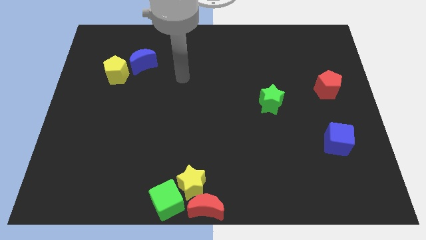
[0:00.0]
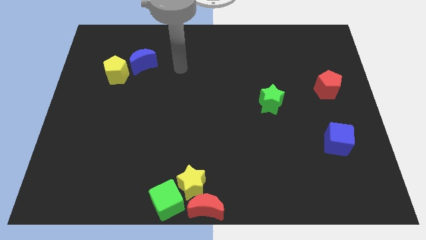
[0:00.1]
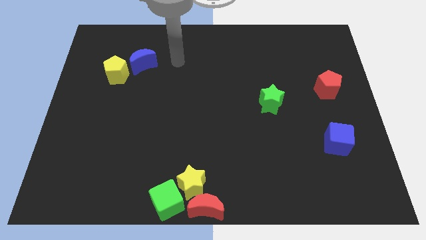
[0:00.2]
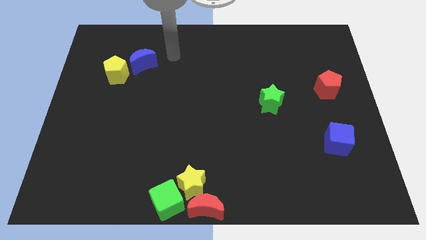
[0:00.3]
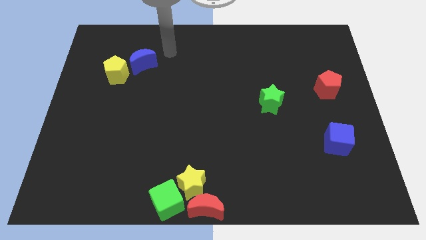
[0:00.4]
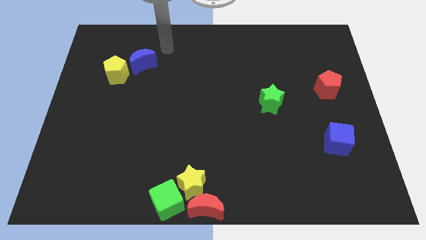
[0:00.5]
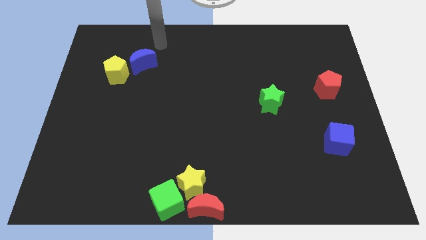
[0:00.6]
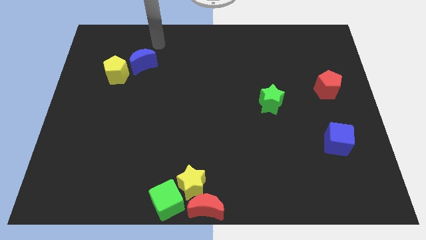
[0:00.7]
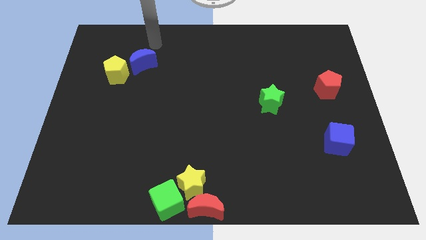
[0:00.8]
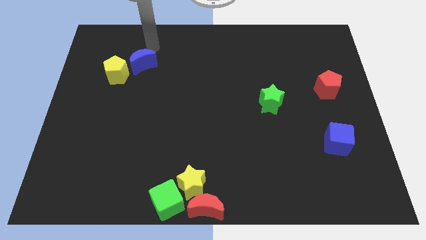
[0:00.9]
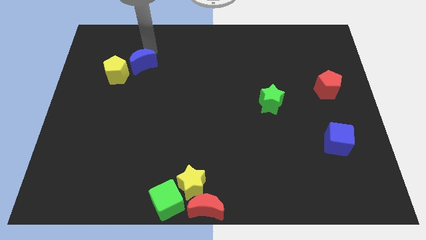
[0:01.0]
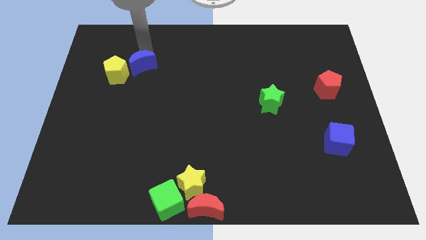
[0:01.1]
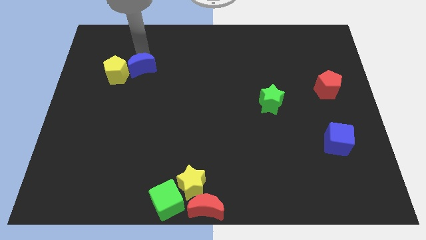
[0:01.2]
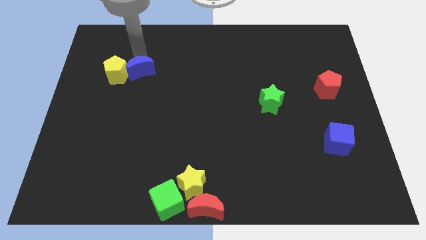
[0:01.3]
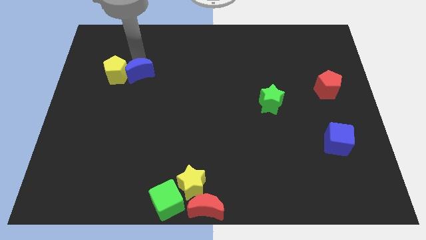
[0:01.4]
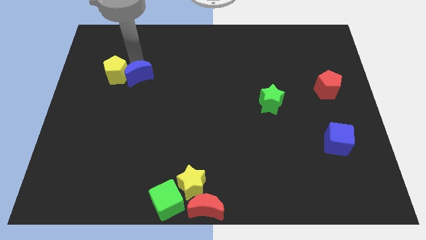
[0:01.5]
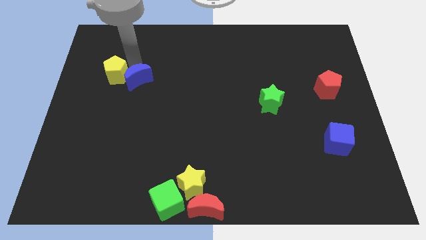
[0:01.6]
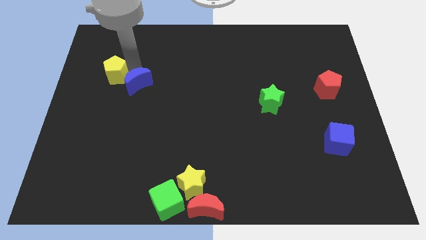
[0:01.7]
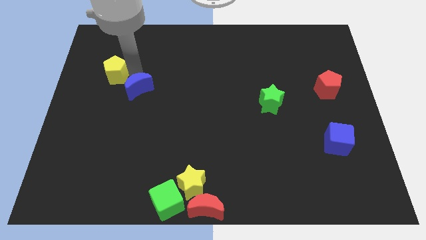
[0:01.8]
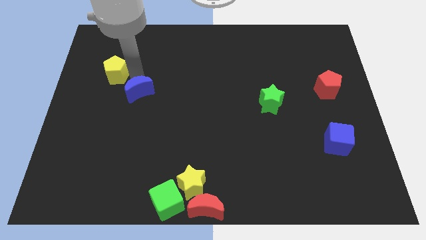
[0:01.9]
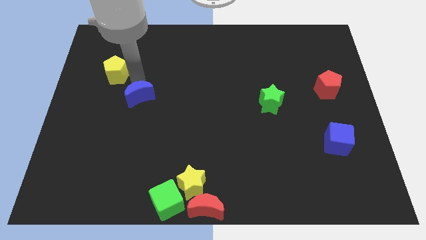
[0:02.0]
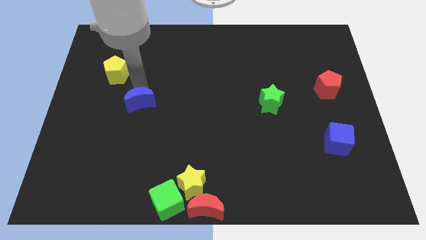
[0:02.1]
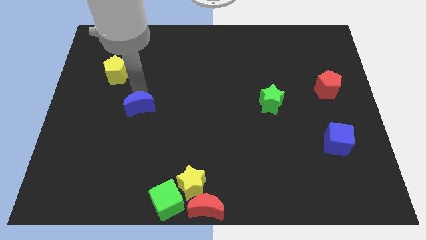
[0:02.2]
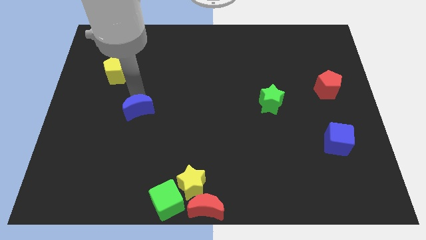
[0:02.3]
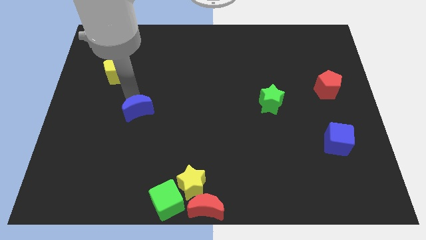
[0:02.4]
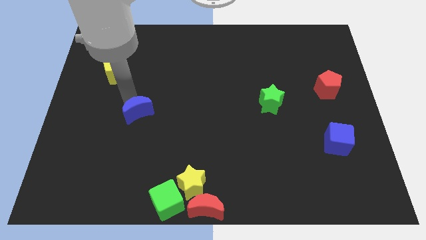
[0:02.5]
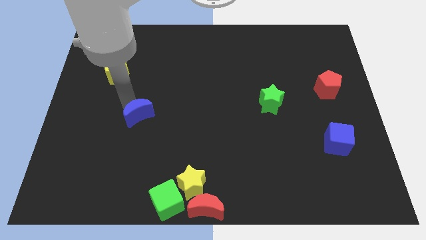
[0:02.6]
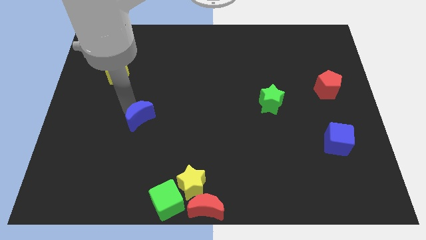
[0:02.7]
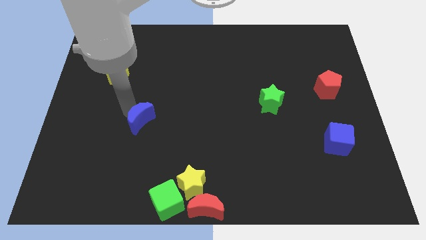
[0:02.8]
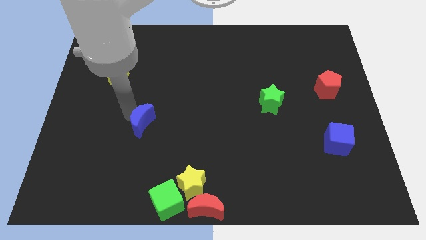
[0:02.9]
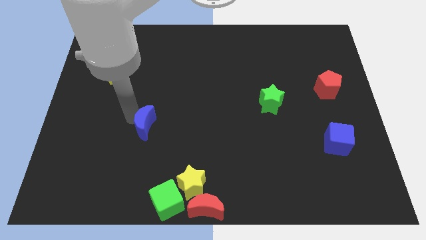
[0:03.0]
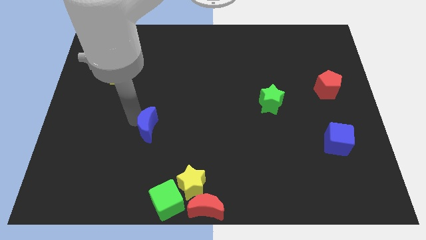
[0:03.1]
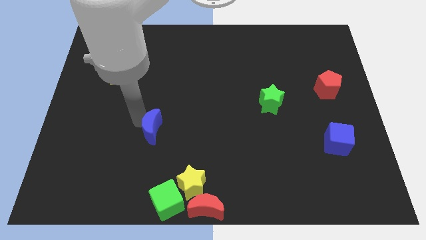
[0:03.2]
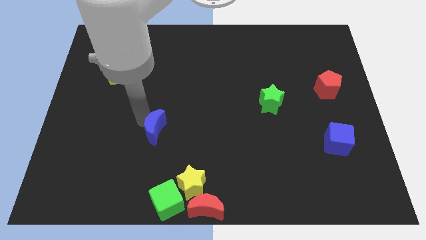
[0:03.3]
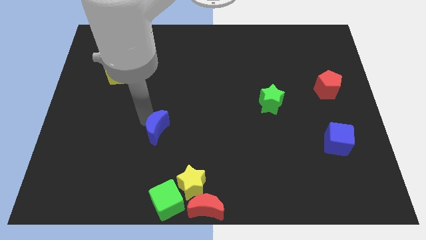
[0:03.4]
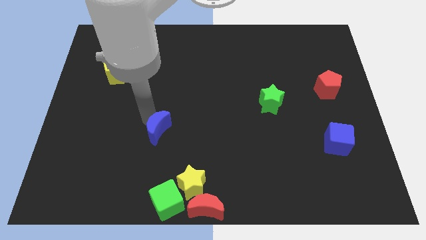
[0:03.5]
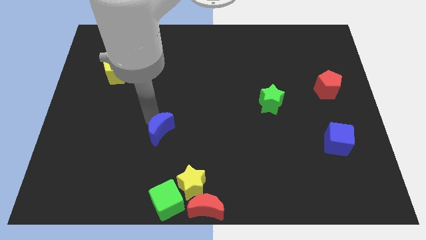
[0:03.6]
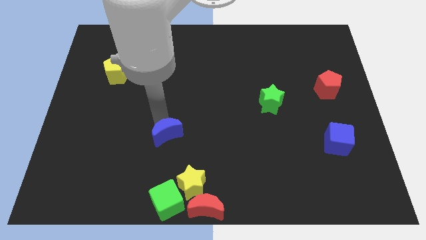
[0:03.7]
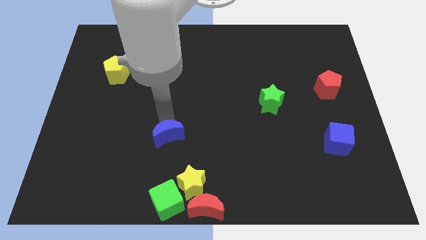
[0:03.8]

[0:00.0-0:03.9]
move the blue crescent towards the yellow star

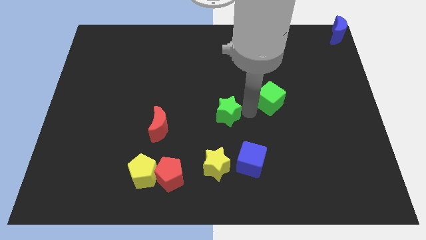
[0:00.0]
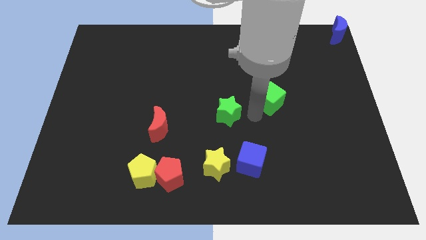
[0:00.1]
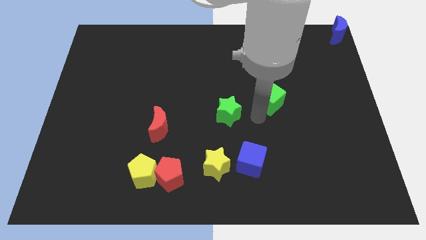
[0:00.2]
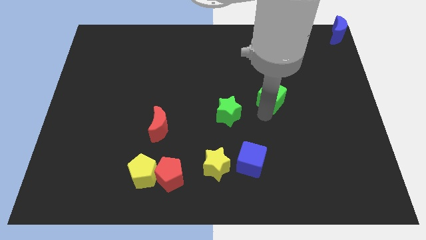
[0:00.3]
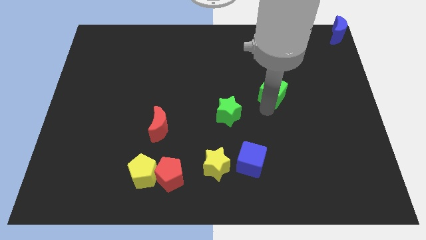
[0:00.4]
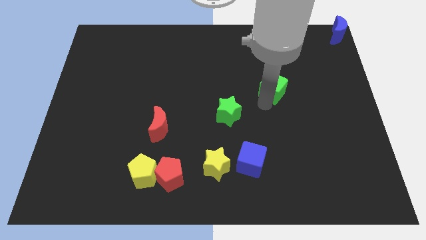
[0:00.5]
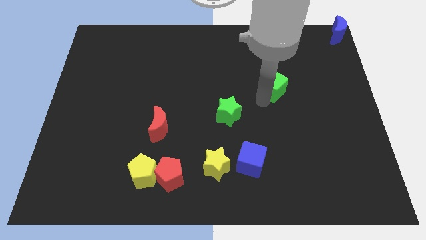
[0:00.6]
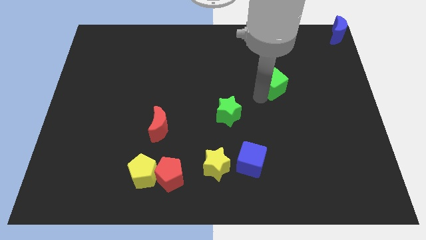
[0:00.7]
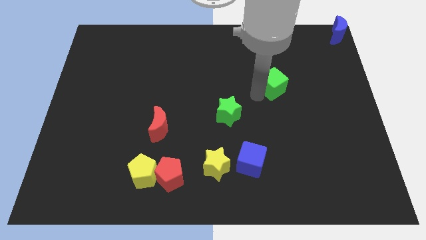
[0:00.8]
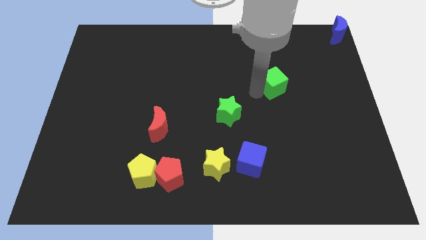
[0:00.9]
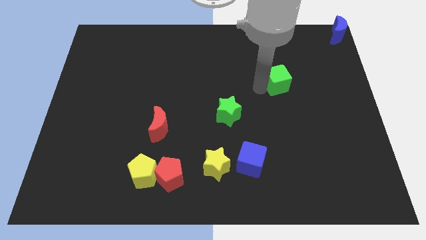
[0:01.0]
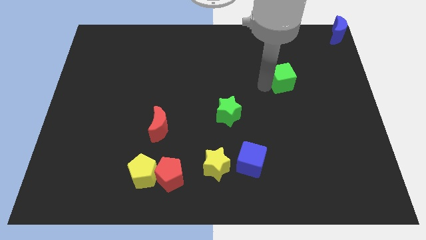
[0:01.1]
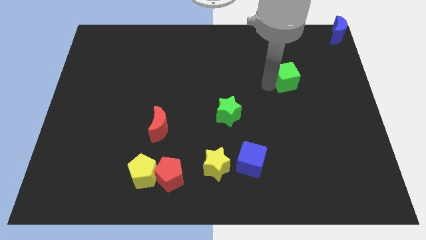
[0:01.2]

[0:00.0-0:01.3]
touch the bottom of green cube

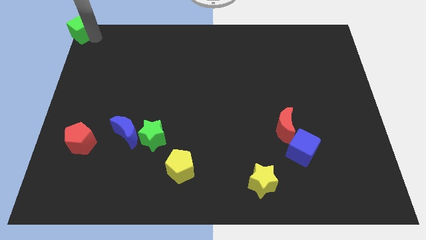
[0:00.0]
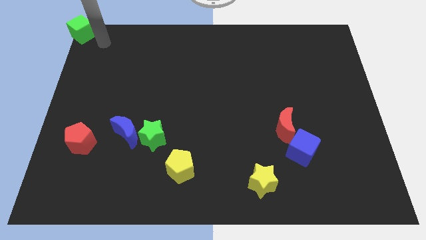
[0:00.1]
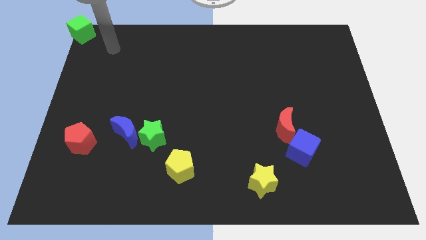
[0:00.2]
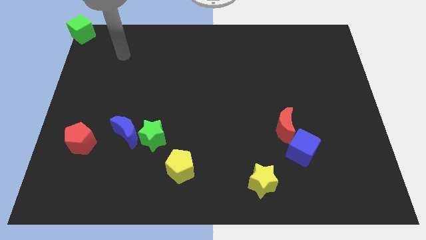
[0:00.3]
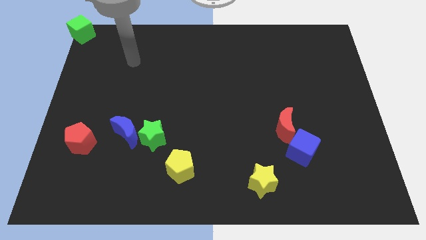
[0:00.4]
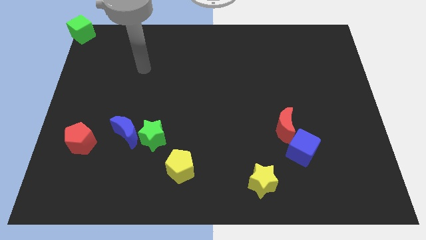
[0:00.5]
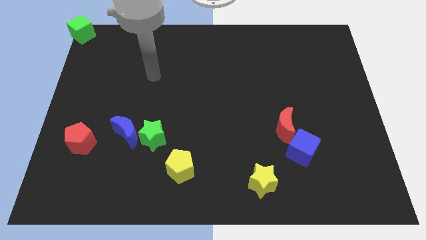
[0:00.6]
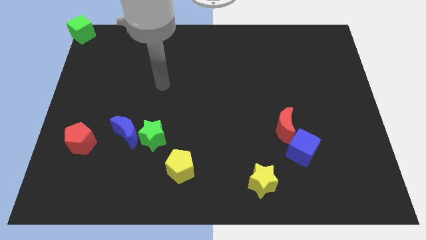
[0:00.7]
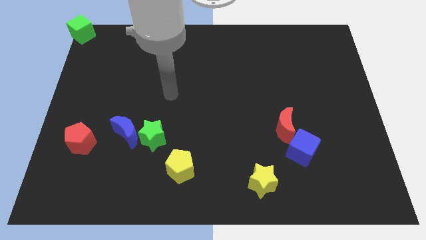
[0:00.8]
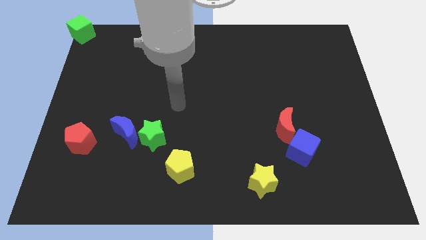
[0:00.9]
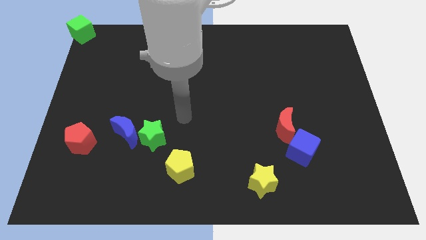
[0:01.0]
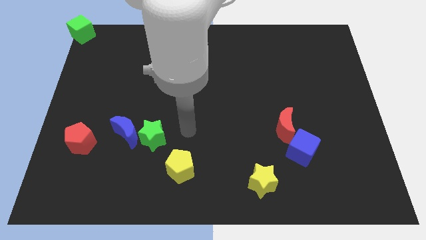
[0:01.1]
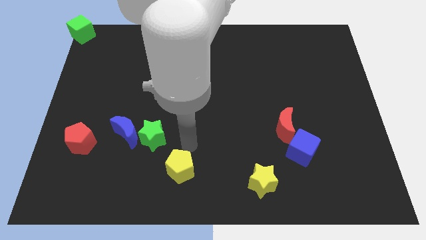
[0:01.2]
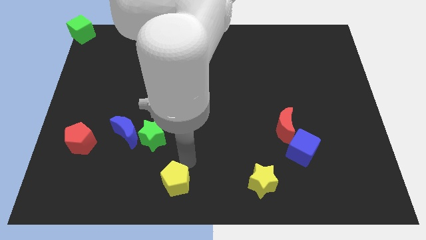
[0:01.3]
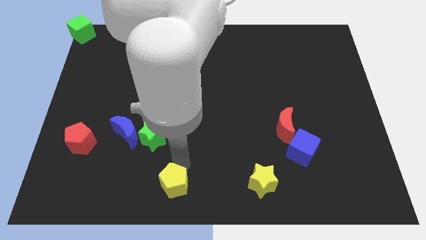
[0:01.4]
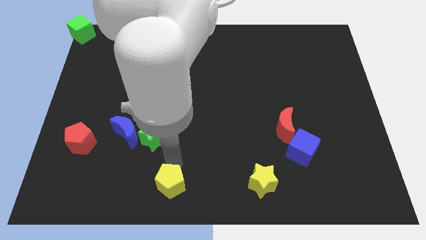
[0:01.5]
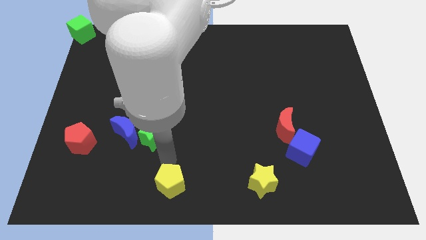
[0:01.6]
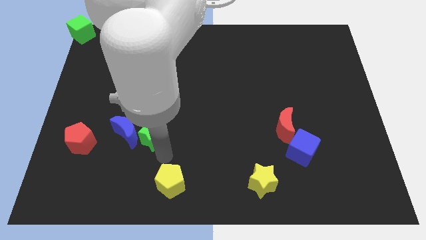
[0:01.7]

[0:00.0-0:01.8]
slightly push the yellow pentagon to the bottom side

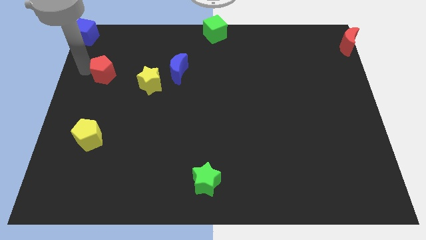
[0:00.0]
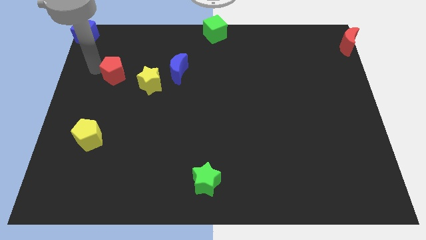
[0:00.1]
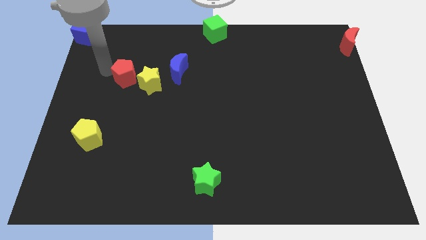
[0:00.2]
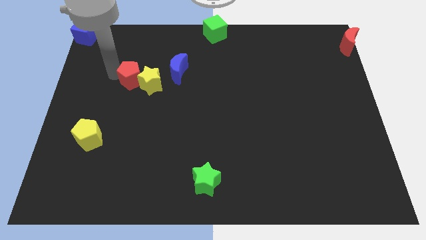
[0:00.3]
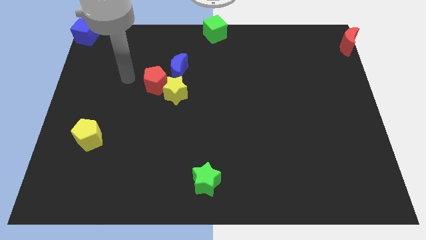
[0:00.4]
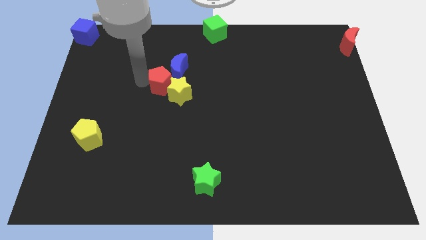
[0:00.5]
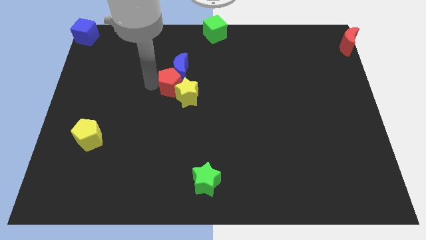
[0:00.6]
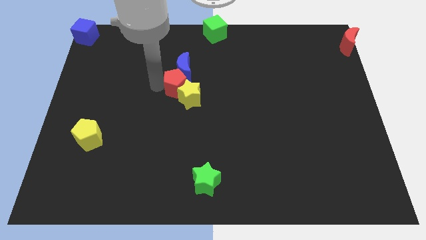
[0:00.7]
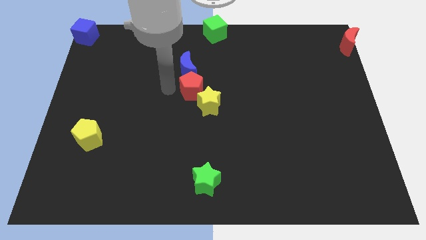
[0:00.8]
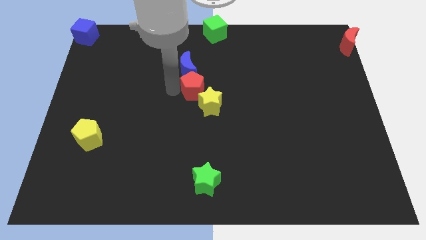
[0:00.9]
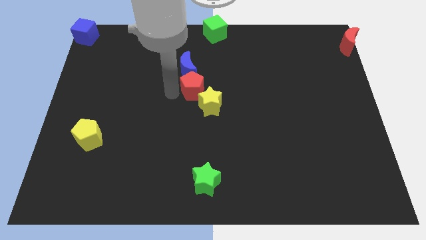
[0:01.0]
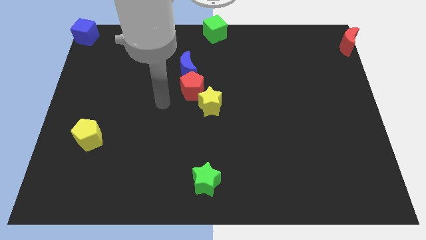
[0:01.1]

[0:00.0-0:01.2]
push red pentagon towards yellow star at the center

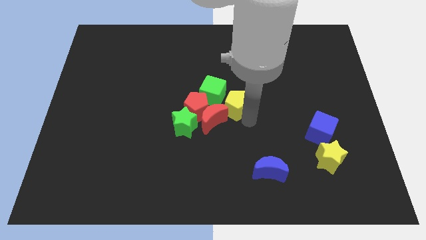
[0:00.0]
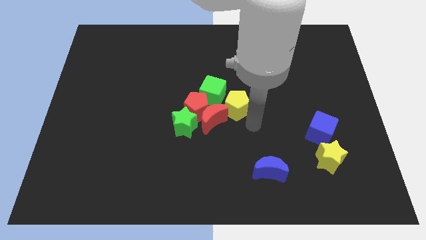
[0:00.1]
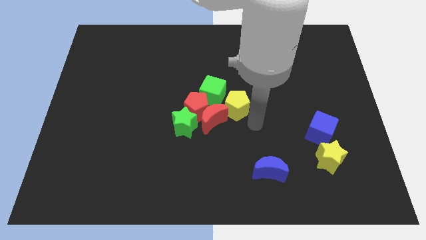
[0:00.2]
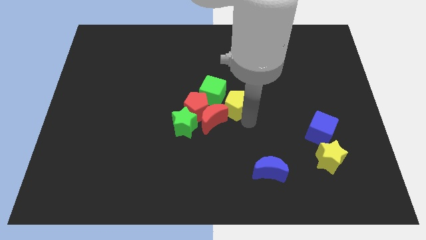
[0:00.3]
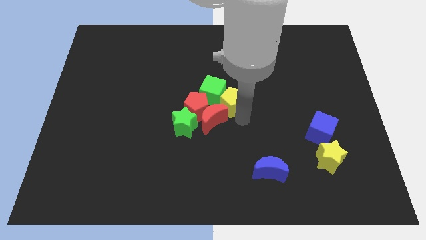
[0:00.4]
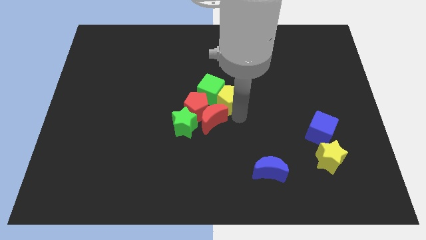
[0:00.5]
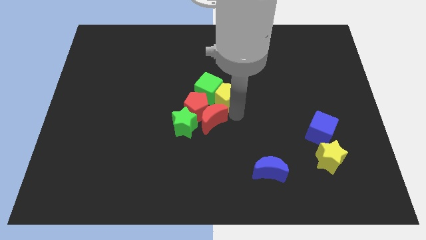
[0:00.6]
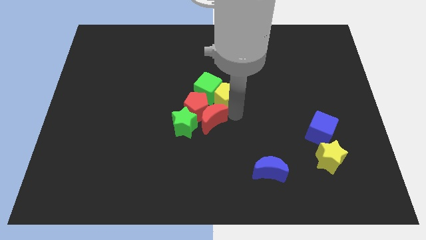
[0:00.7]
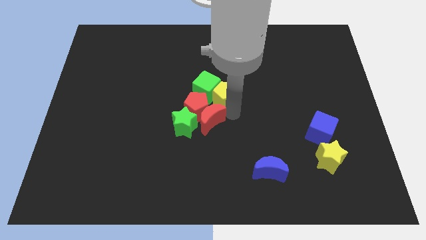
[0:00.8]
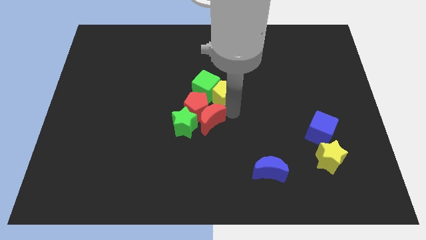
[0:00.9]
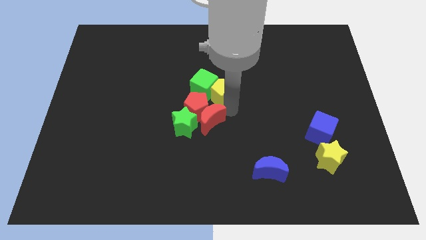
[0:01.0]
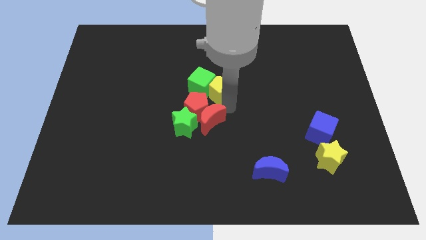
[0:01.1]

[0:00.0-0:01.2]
push the yellow pentagon into the green cube
